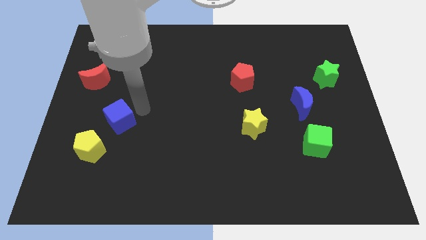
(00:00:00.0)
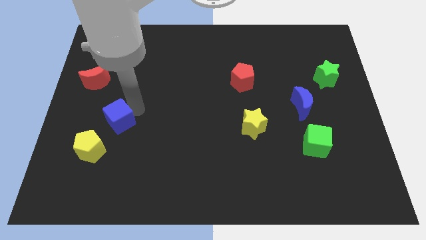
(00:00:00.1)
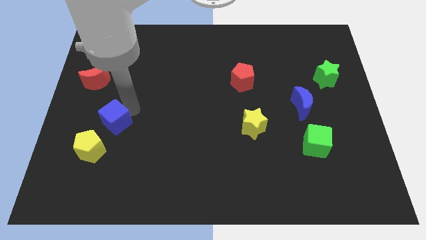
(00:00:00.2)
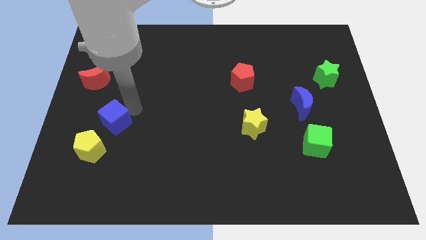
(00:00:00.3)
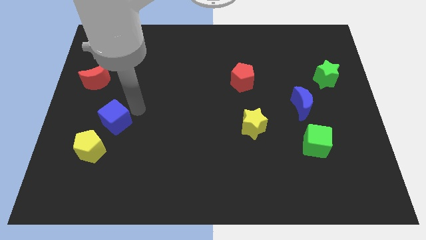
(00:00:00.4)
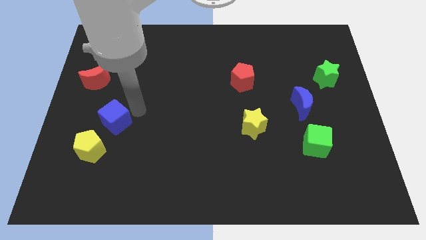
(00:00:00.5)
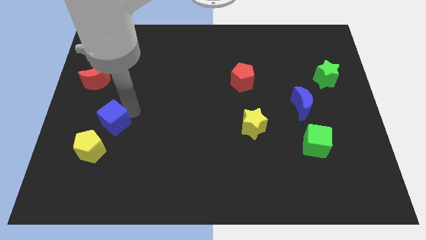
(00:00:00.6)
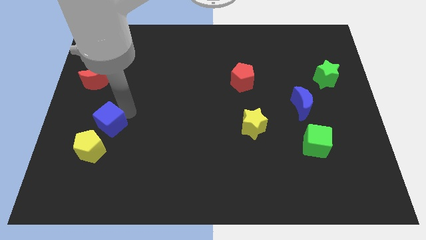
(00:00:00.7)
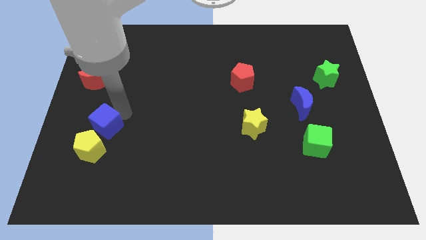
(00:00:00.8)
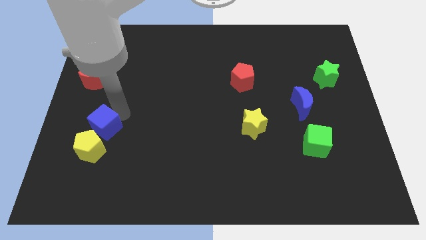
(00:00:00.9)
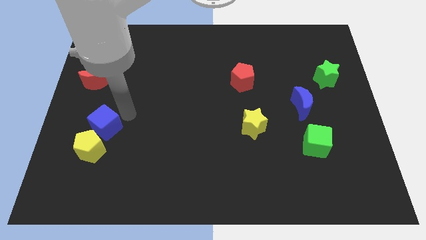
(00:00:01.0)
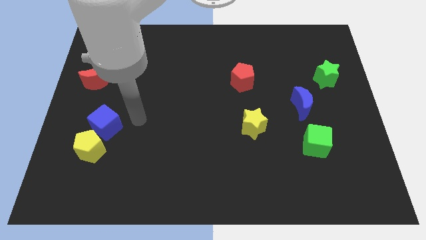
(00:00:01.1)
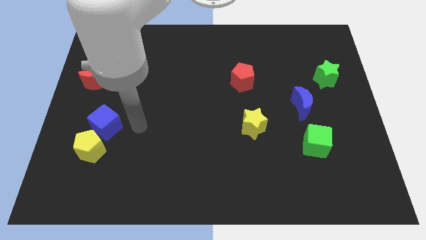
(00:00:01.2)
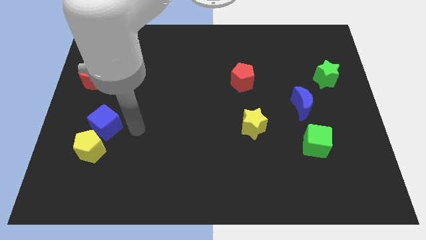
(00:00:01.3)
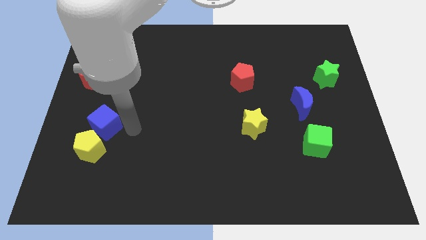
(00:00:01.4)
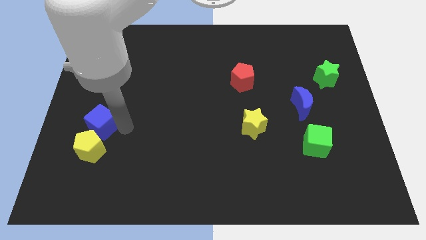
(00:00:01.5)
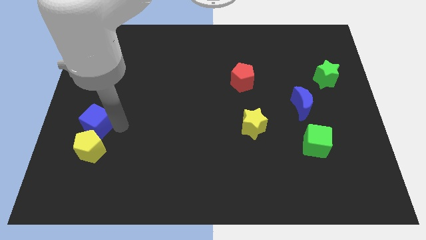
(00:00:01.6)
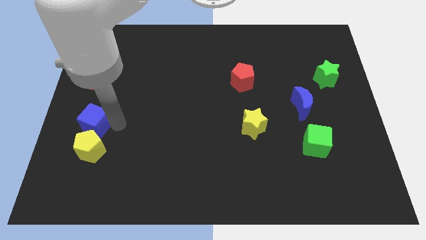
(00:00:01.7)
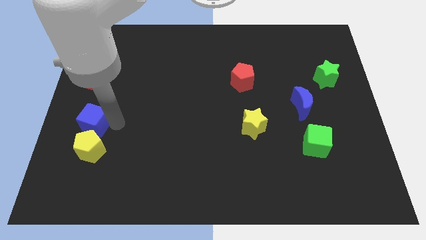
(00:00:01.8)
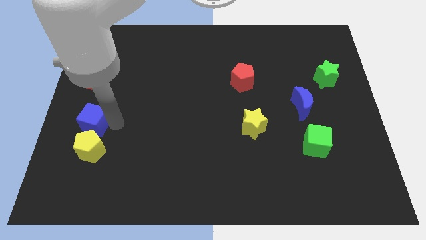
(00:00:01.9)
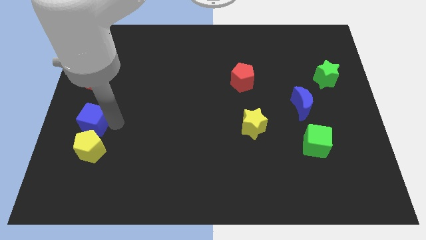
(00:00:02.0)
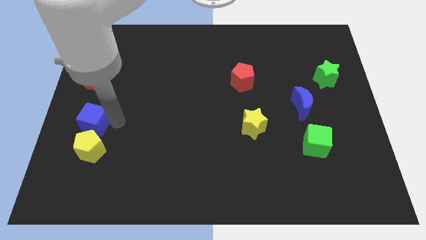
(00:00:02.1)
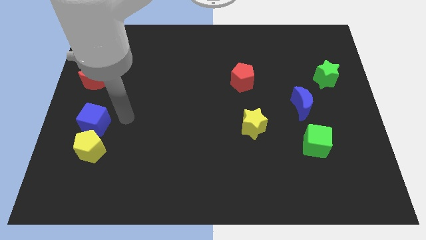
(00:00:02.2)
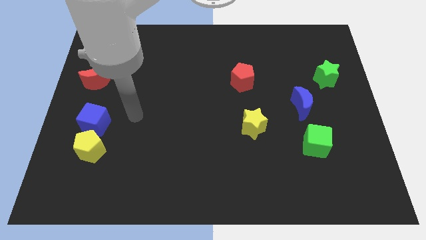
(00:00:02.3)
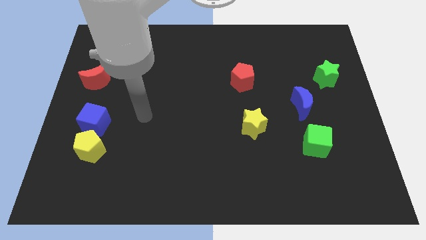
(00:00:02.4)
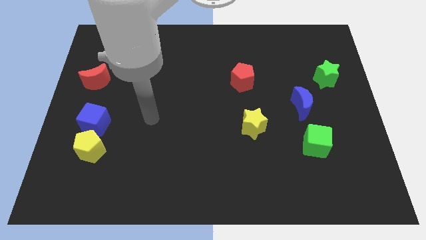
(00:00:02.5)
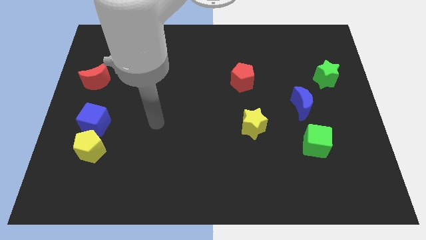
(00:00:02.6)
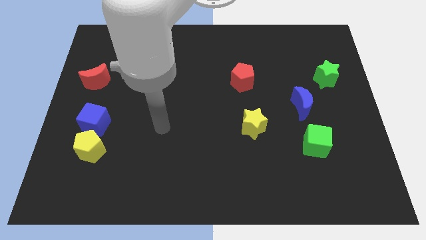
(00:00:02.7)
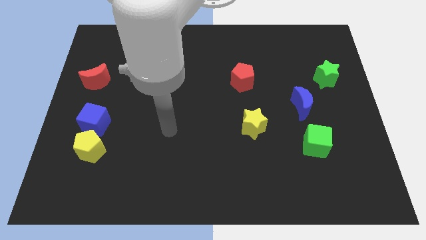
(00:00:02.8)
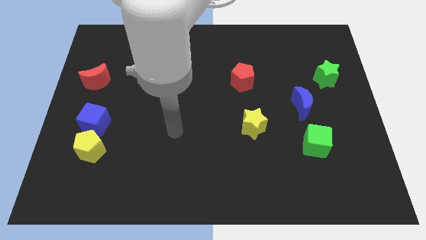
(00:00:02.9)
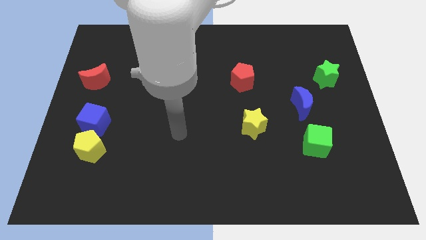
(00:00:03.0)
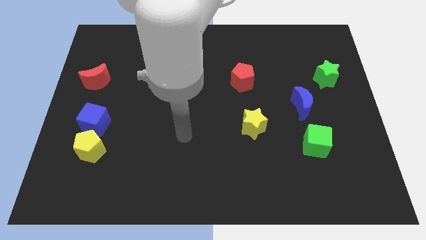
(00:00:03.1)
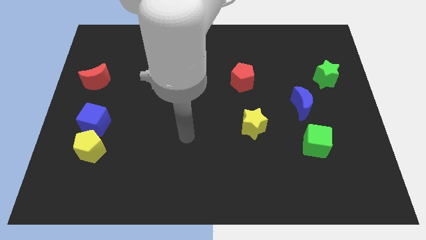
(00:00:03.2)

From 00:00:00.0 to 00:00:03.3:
move the blue cube above the yellow pentagon

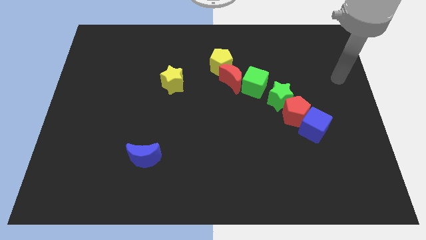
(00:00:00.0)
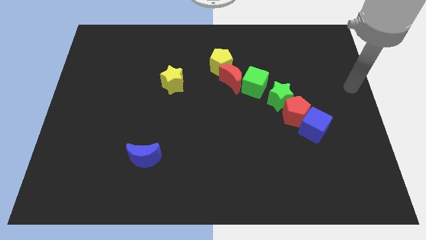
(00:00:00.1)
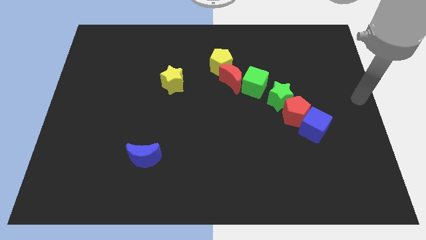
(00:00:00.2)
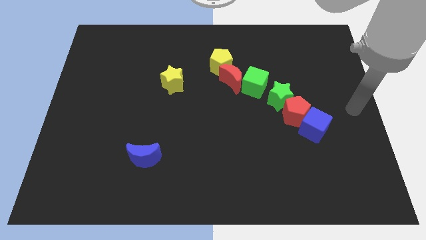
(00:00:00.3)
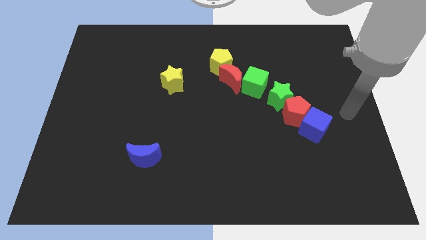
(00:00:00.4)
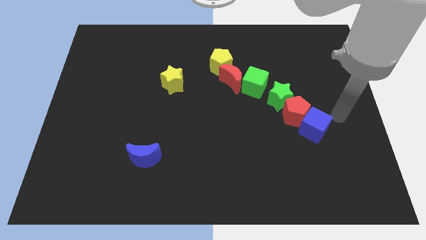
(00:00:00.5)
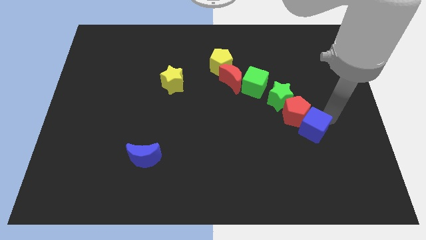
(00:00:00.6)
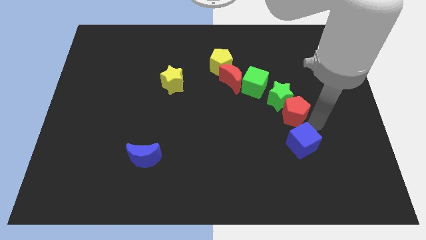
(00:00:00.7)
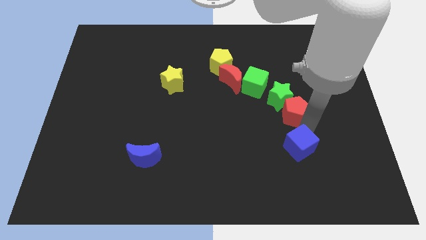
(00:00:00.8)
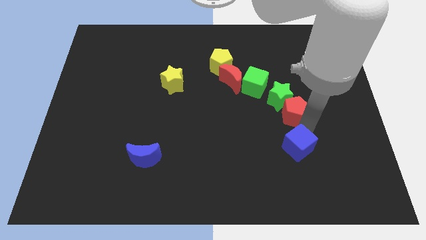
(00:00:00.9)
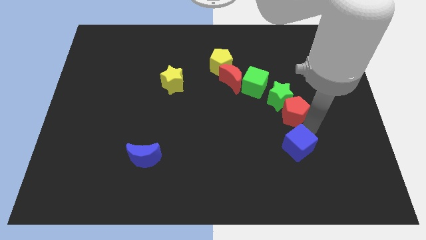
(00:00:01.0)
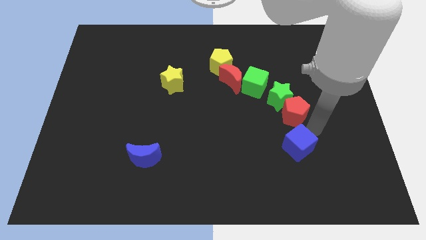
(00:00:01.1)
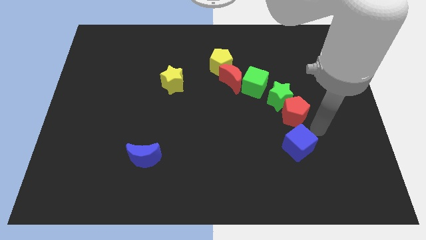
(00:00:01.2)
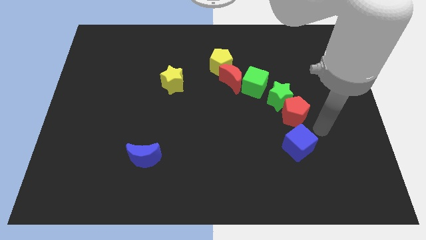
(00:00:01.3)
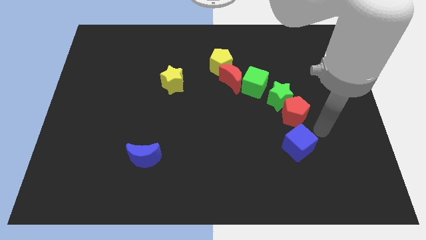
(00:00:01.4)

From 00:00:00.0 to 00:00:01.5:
separate the blue cube from the red pentagon

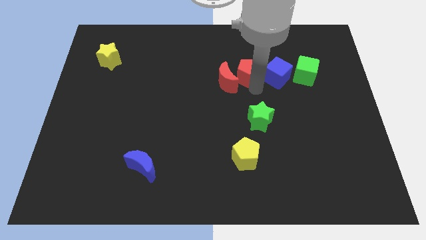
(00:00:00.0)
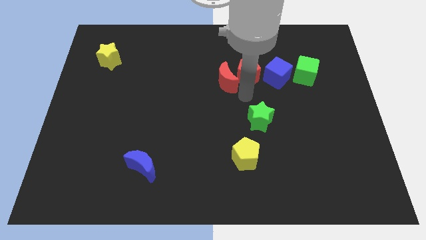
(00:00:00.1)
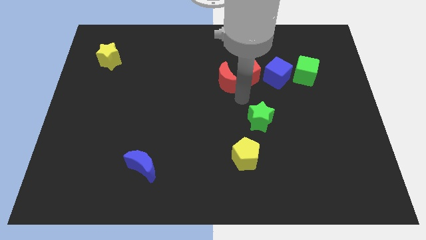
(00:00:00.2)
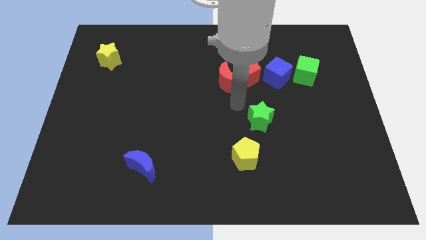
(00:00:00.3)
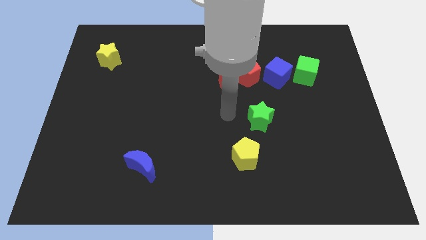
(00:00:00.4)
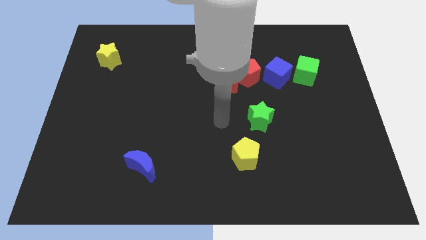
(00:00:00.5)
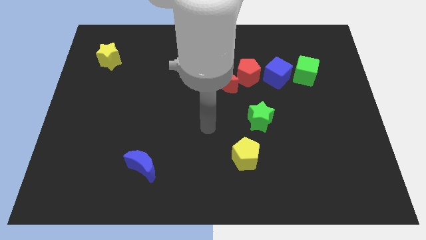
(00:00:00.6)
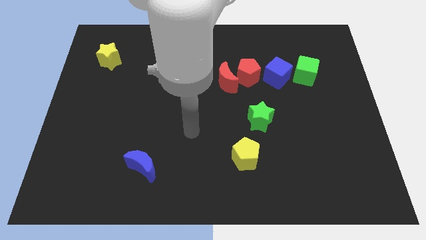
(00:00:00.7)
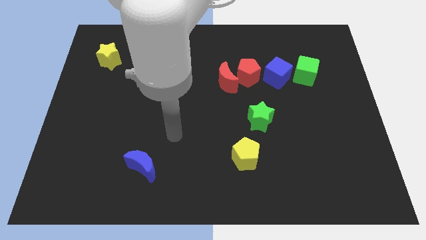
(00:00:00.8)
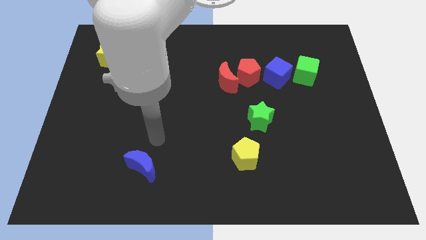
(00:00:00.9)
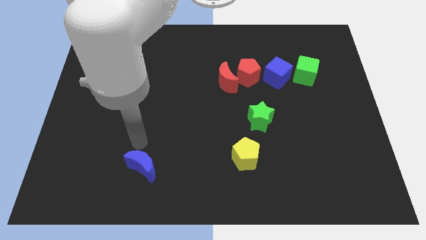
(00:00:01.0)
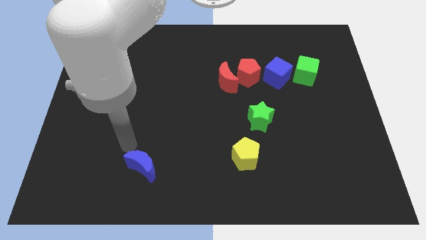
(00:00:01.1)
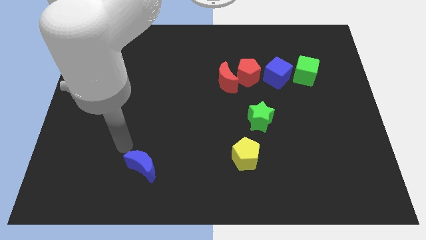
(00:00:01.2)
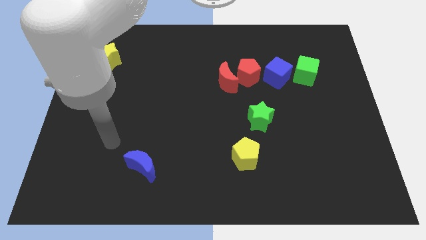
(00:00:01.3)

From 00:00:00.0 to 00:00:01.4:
move your arm towards the blue crescent

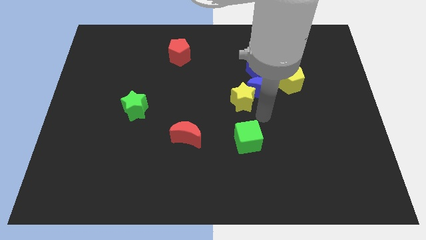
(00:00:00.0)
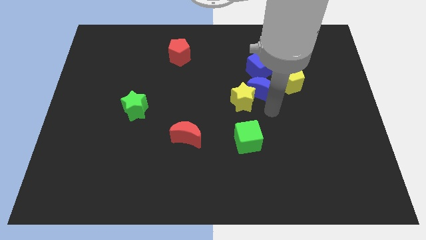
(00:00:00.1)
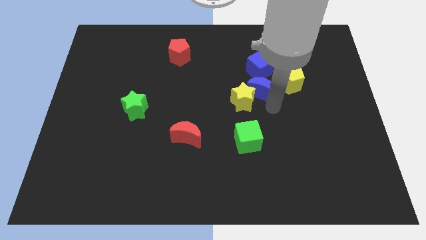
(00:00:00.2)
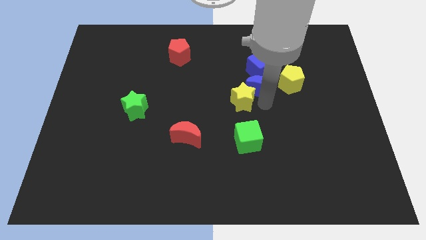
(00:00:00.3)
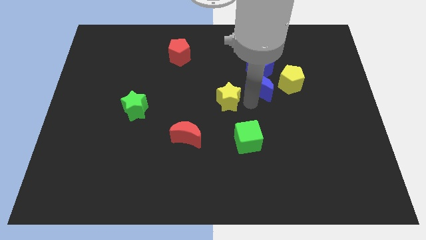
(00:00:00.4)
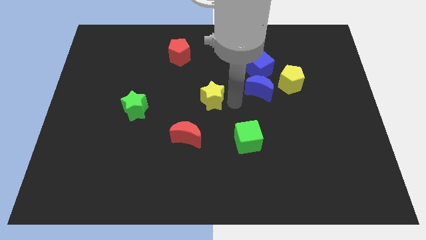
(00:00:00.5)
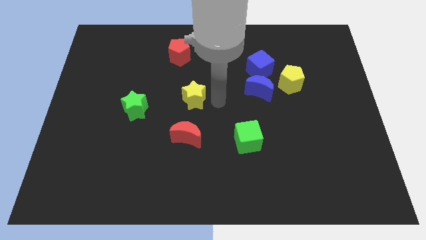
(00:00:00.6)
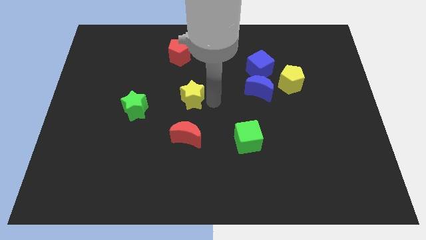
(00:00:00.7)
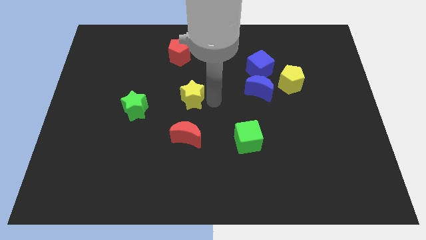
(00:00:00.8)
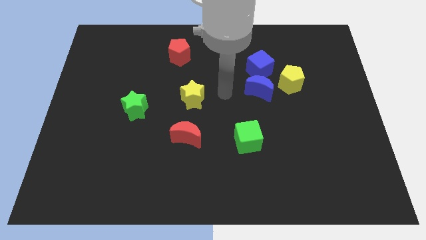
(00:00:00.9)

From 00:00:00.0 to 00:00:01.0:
move the yellow star towards the green star

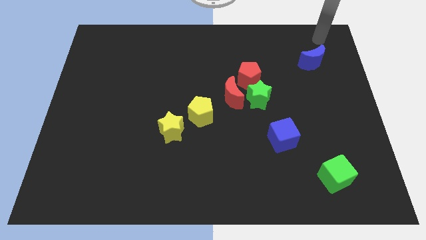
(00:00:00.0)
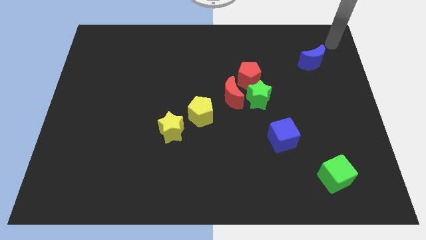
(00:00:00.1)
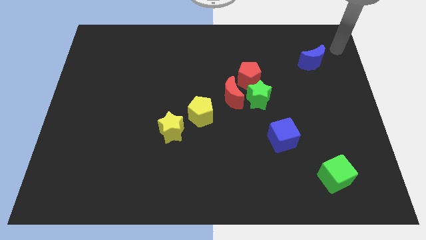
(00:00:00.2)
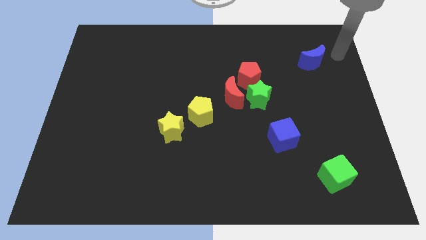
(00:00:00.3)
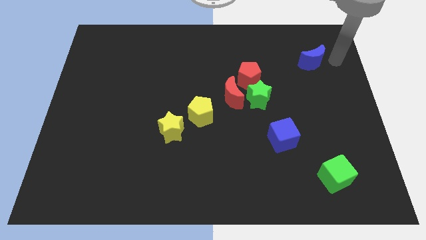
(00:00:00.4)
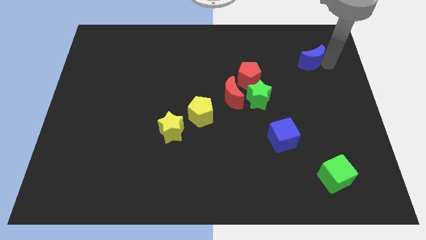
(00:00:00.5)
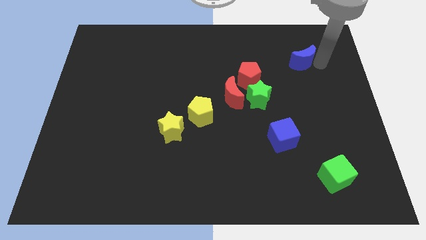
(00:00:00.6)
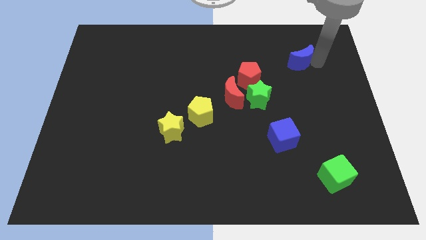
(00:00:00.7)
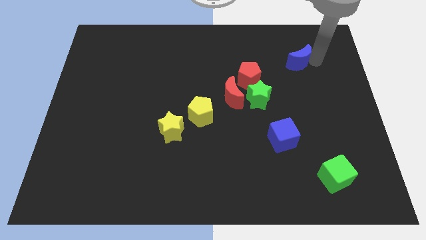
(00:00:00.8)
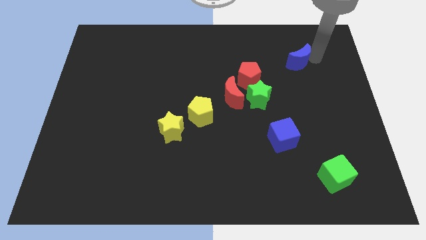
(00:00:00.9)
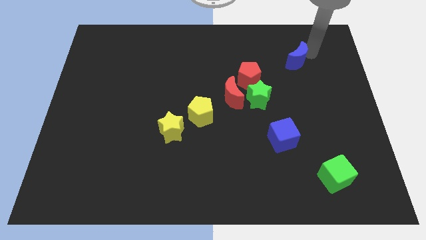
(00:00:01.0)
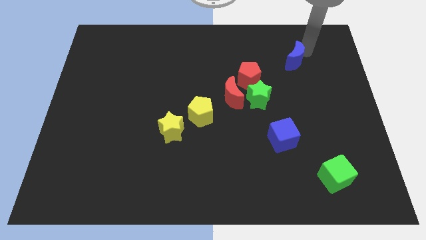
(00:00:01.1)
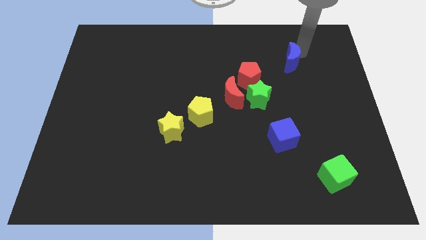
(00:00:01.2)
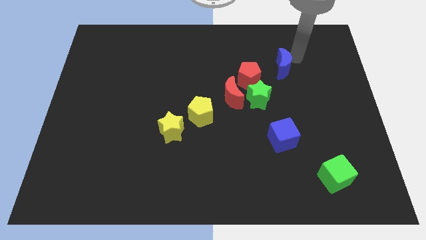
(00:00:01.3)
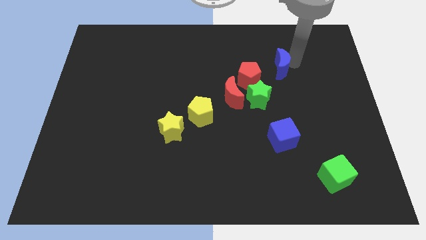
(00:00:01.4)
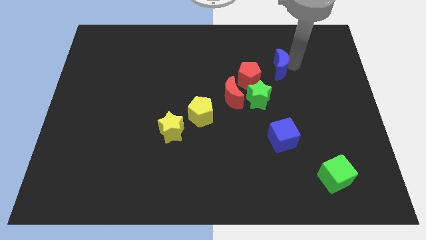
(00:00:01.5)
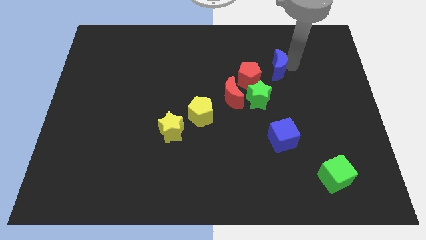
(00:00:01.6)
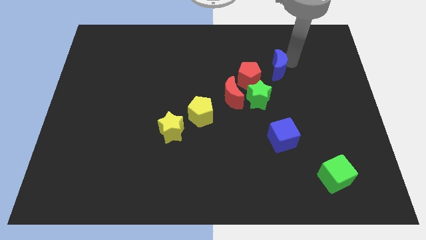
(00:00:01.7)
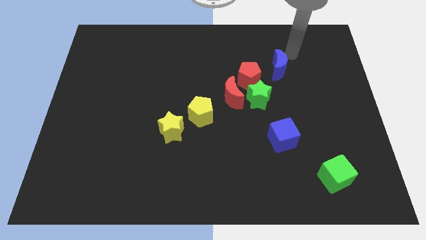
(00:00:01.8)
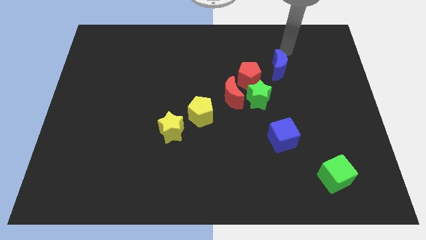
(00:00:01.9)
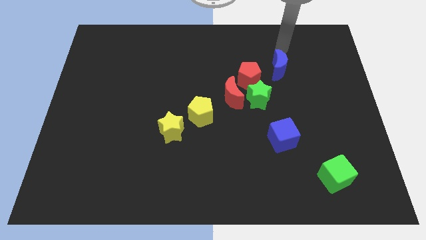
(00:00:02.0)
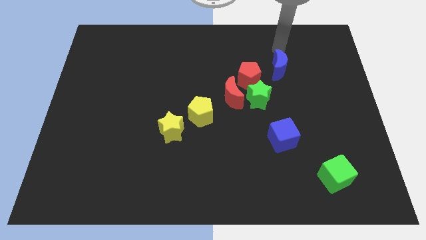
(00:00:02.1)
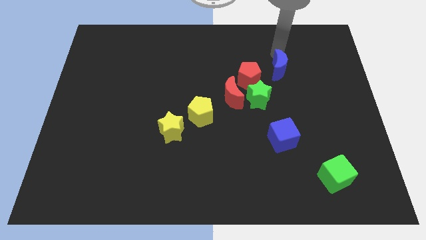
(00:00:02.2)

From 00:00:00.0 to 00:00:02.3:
push the blue moon to the right of the red pentagon
